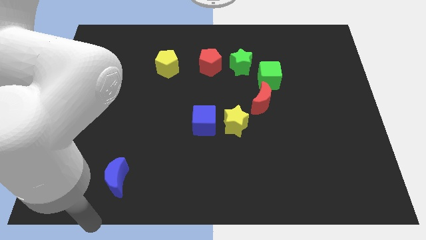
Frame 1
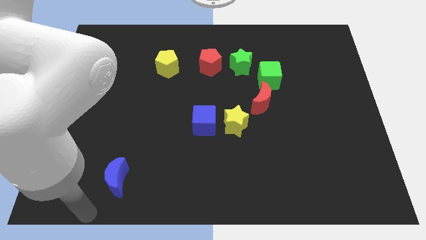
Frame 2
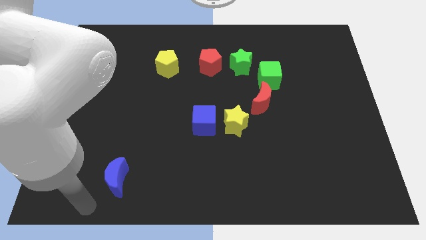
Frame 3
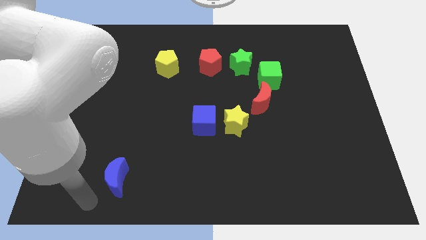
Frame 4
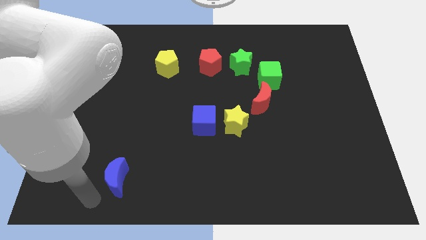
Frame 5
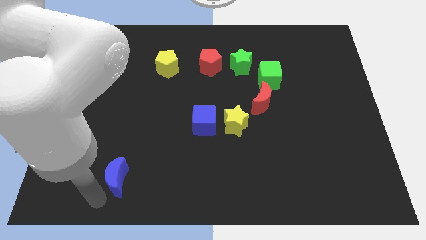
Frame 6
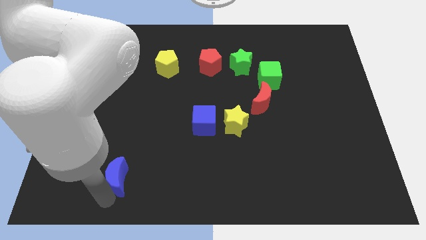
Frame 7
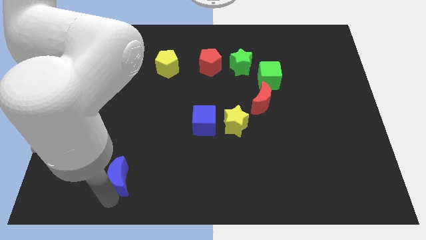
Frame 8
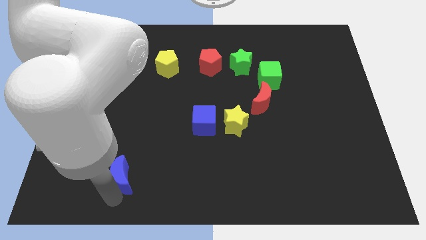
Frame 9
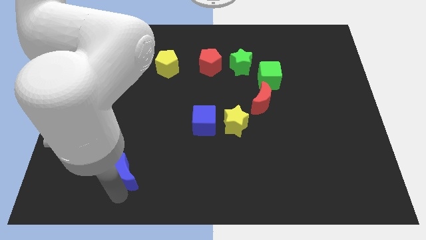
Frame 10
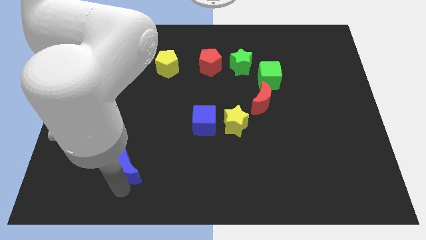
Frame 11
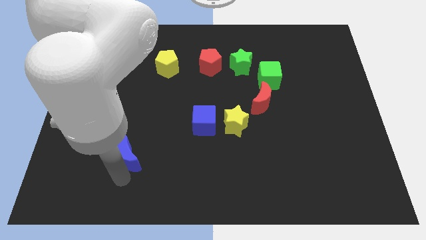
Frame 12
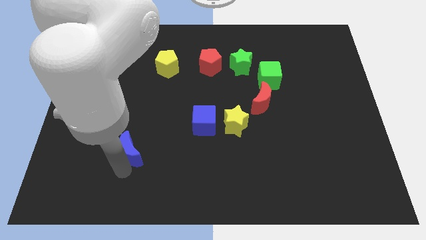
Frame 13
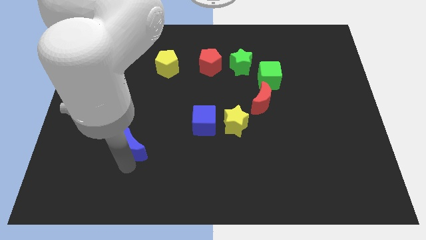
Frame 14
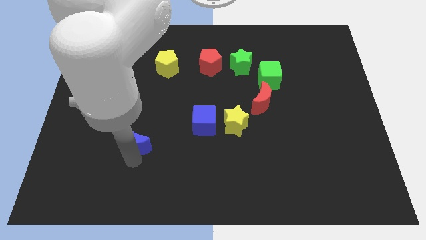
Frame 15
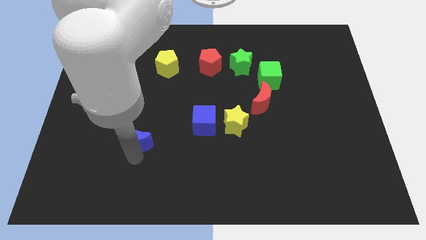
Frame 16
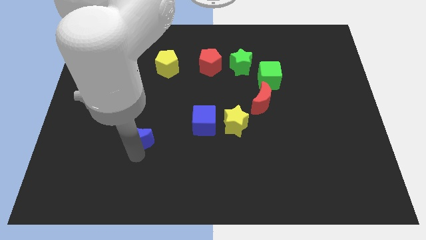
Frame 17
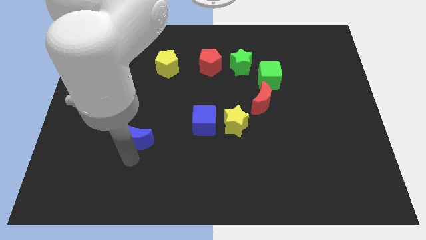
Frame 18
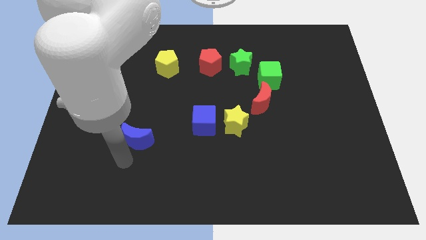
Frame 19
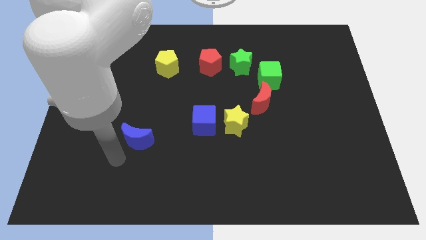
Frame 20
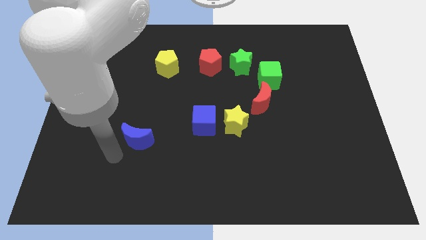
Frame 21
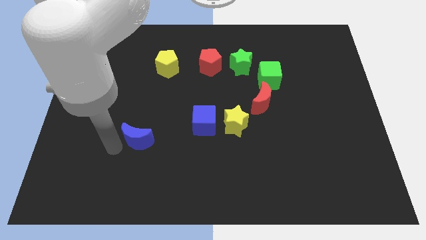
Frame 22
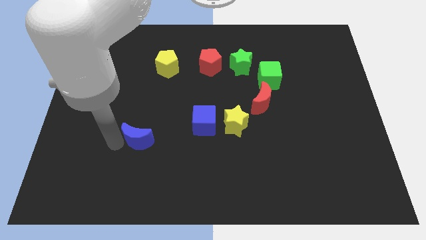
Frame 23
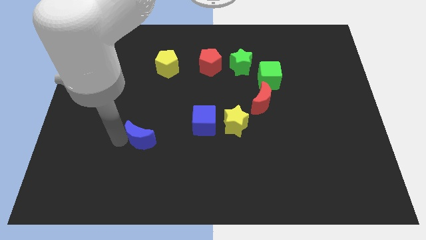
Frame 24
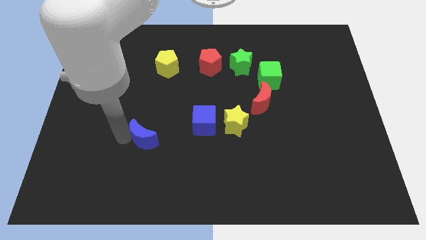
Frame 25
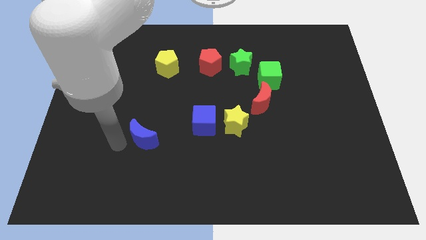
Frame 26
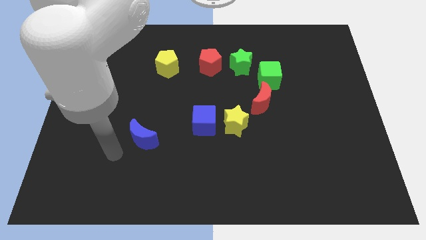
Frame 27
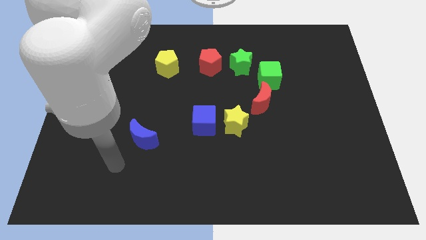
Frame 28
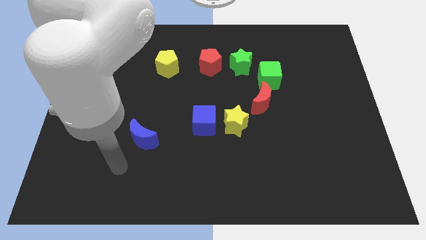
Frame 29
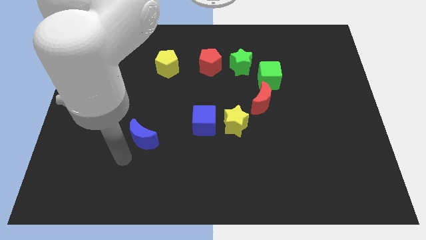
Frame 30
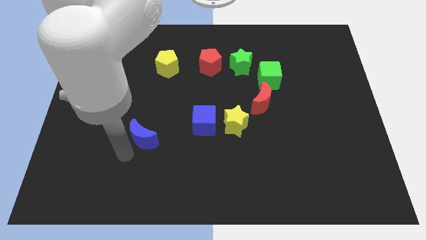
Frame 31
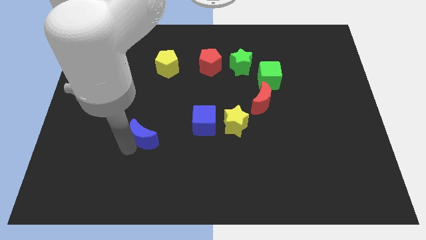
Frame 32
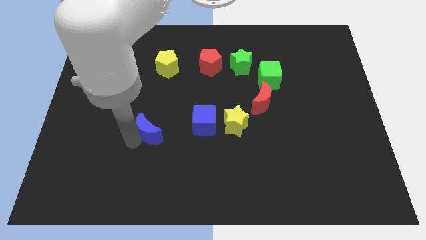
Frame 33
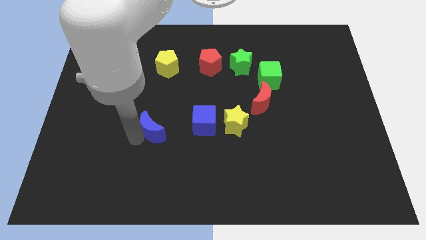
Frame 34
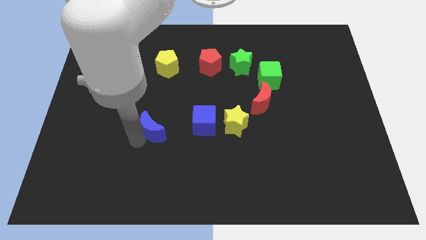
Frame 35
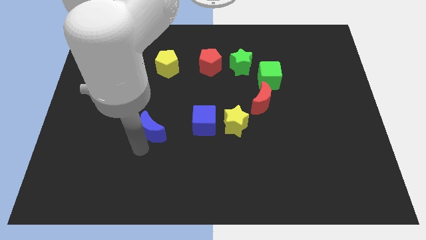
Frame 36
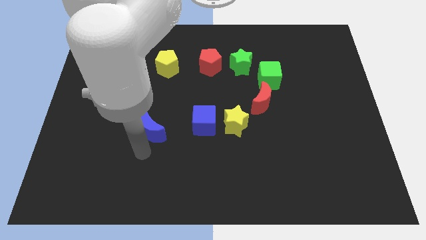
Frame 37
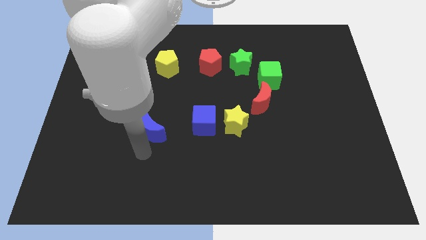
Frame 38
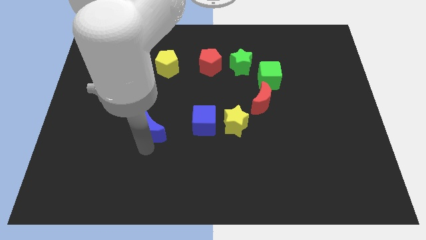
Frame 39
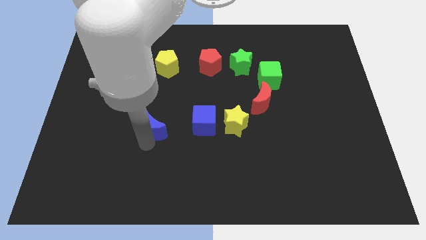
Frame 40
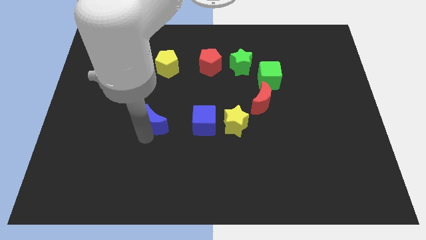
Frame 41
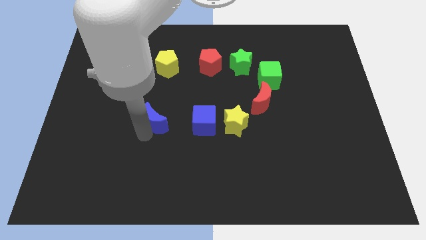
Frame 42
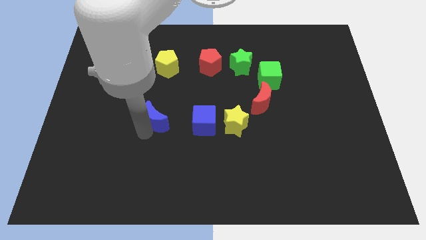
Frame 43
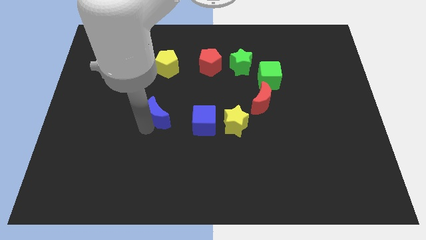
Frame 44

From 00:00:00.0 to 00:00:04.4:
place blue moon parallel to blue cube

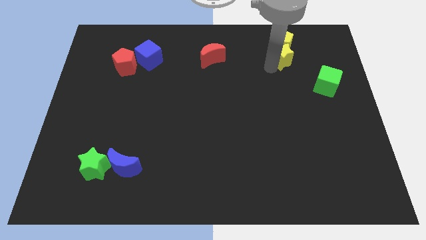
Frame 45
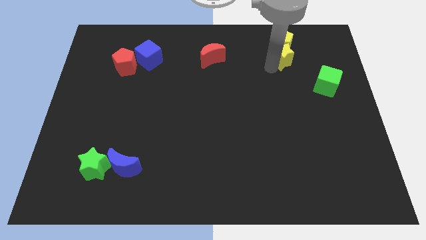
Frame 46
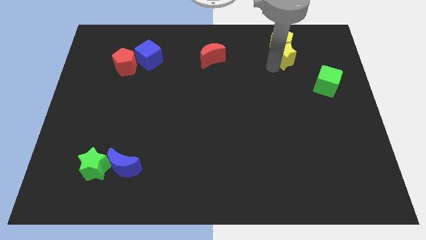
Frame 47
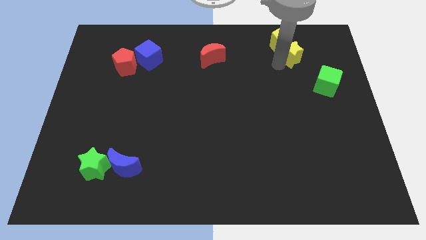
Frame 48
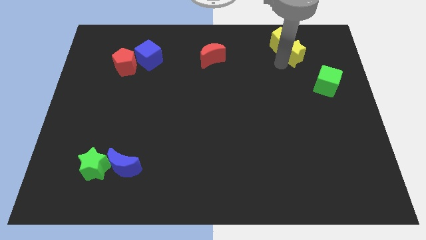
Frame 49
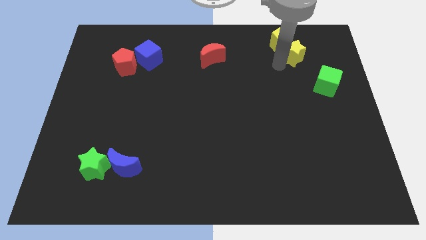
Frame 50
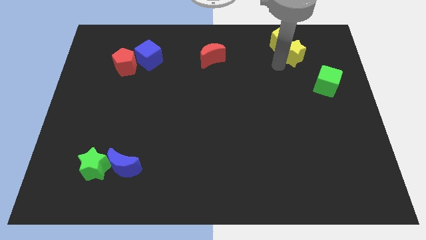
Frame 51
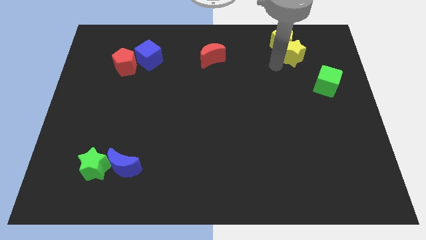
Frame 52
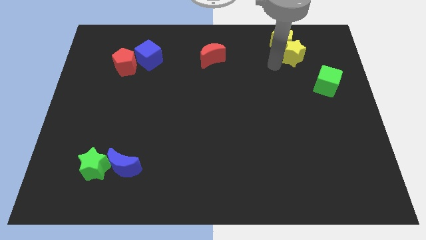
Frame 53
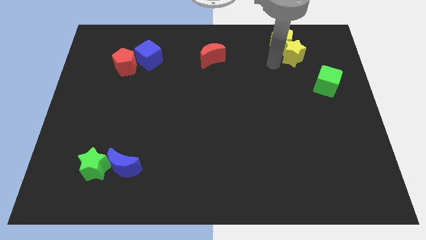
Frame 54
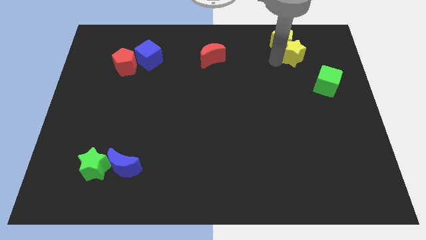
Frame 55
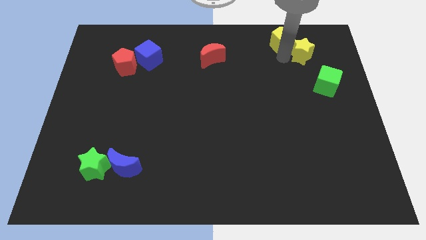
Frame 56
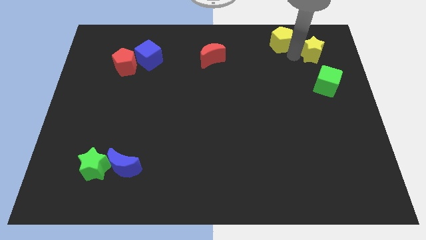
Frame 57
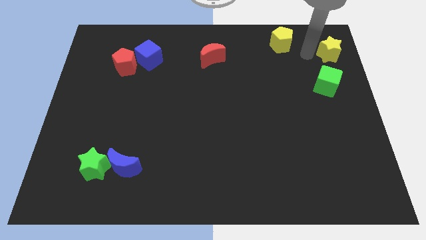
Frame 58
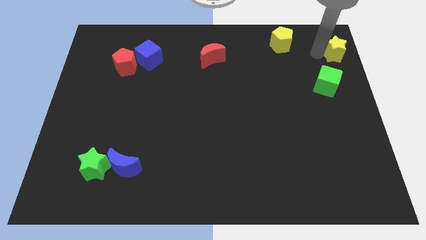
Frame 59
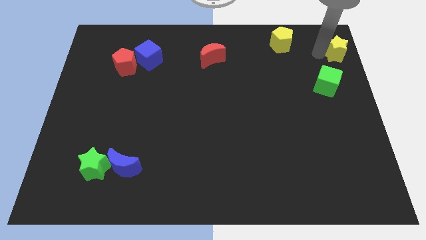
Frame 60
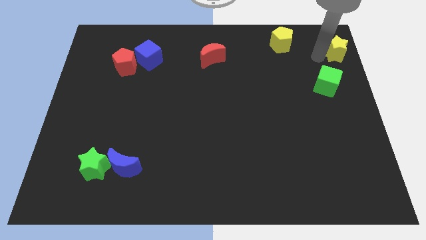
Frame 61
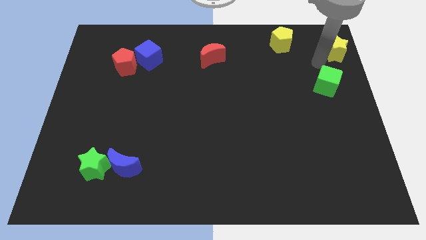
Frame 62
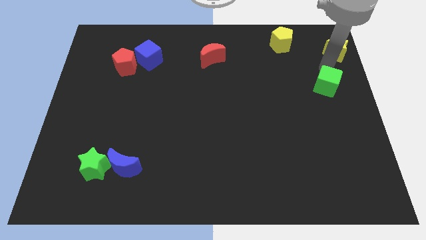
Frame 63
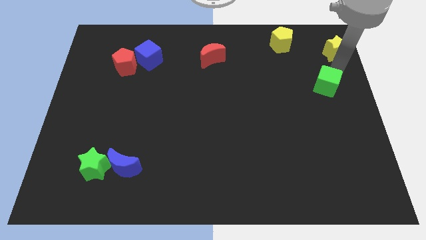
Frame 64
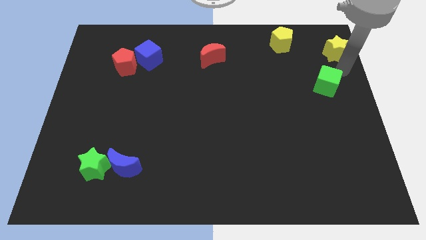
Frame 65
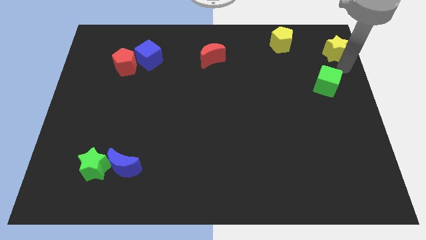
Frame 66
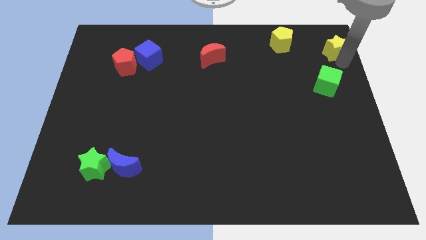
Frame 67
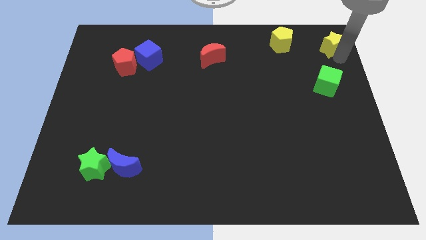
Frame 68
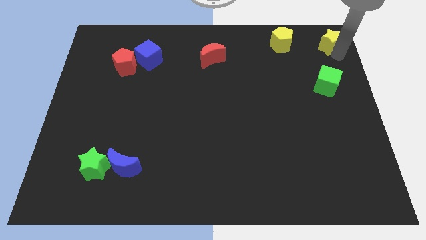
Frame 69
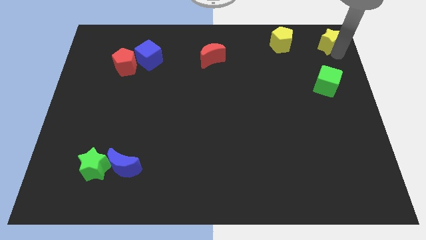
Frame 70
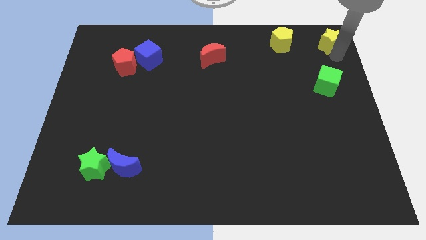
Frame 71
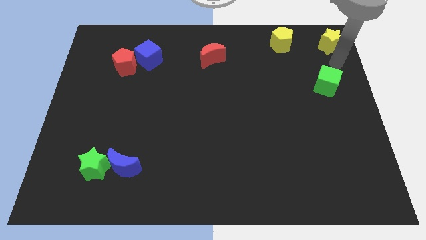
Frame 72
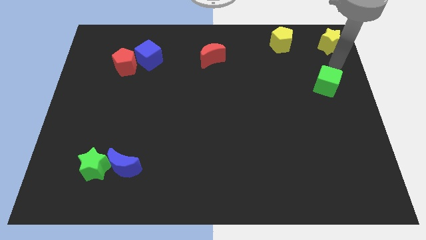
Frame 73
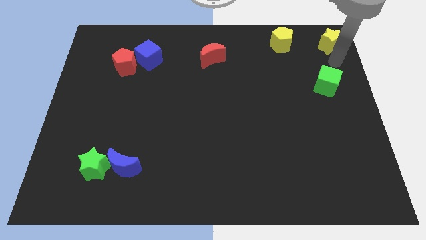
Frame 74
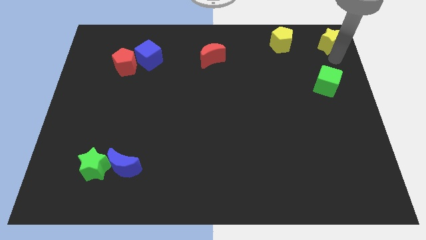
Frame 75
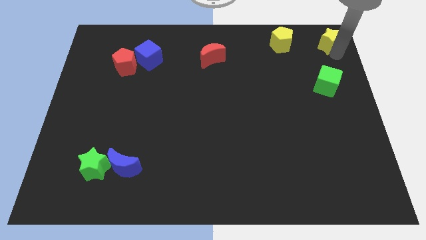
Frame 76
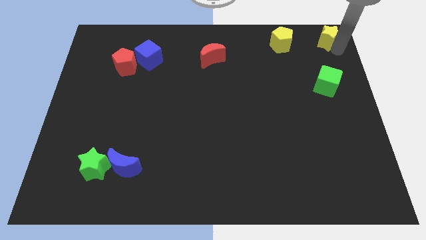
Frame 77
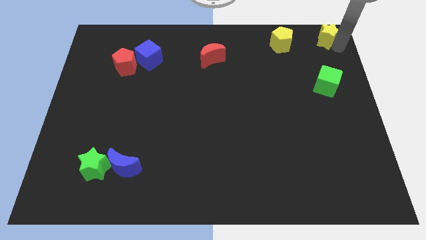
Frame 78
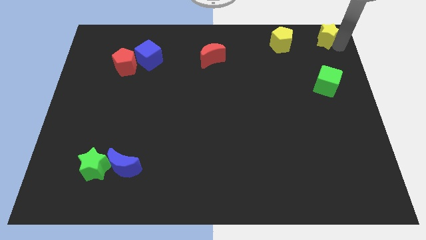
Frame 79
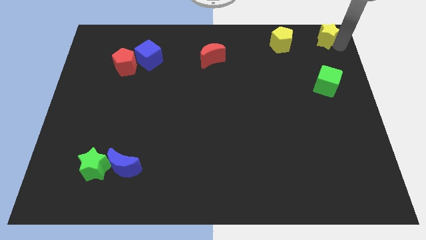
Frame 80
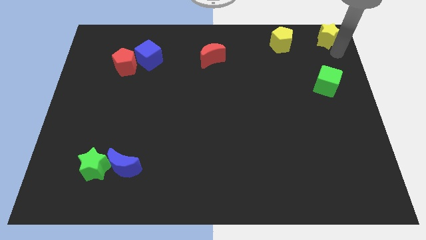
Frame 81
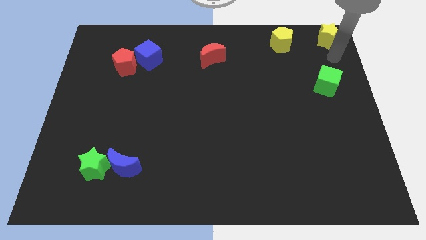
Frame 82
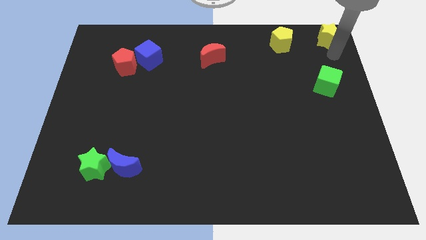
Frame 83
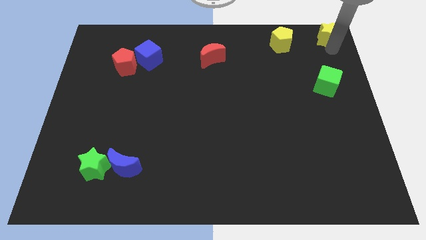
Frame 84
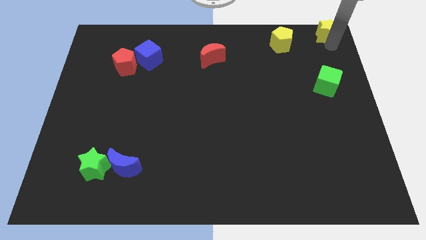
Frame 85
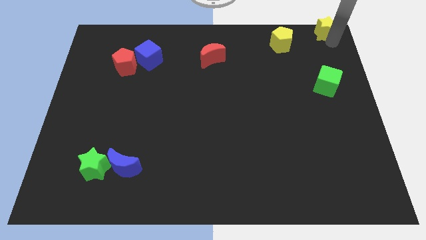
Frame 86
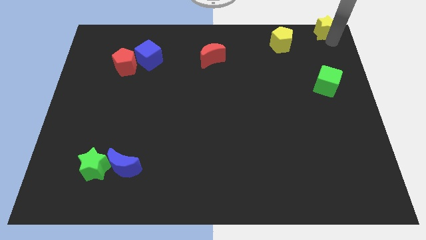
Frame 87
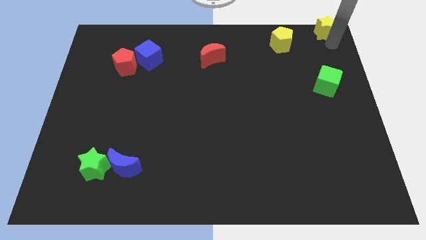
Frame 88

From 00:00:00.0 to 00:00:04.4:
push the yellow star upside right corner of the board

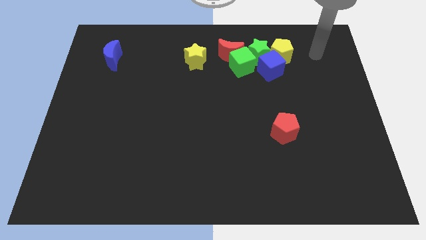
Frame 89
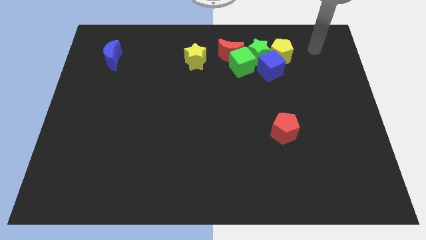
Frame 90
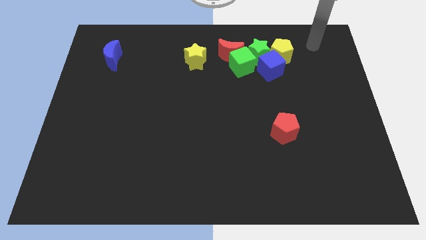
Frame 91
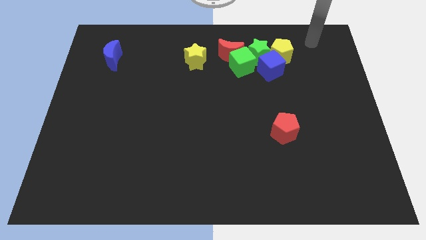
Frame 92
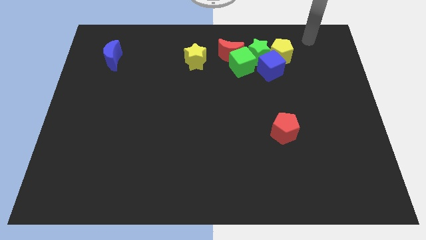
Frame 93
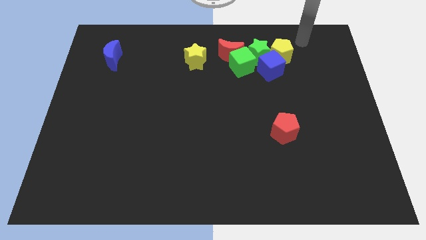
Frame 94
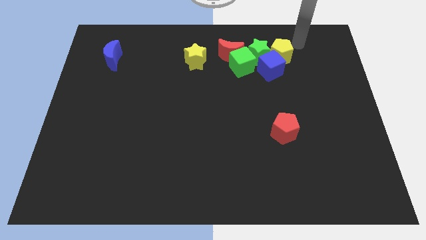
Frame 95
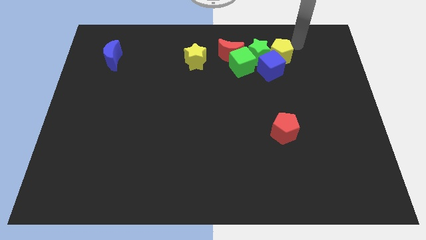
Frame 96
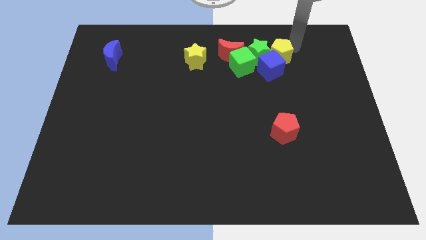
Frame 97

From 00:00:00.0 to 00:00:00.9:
place your arm at the top right side of yellow pentagon
